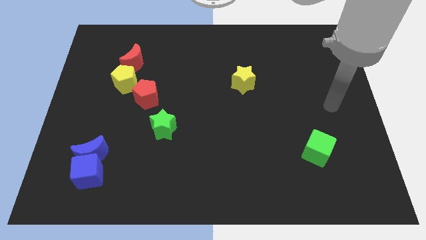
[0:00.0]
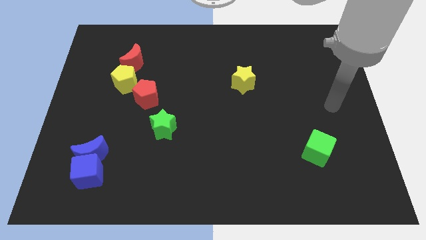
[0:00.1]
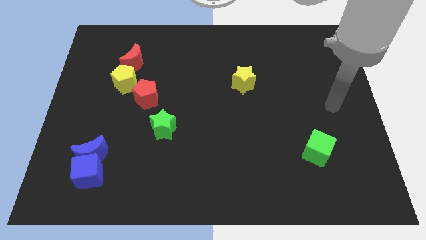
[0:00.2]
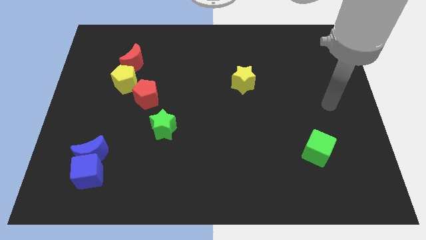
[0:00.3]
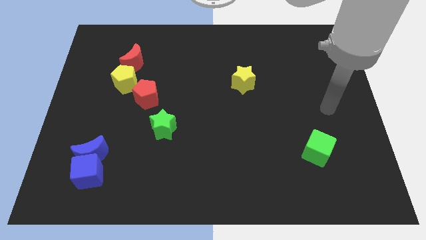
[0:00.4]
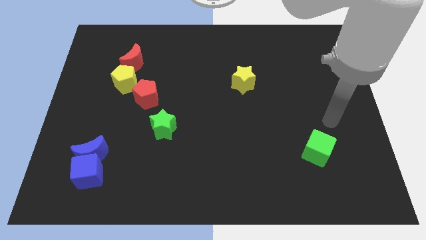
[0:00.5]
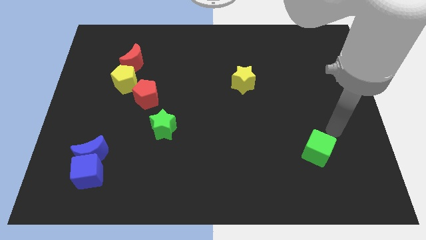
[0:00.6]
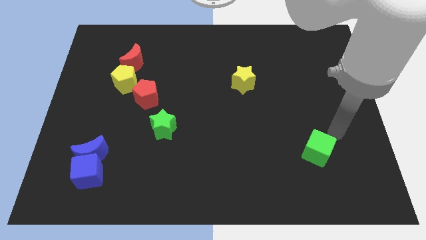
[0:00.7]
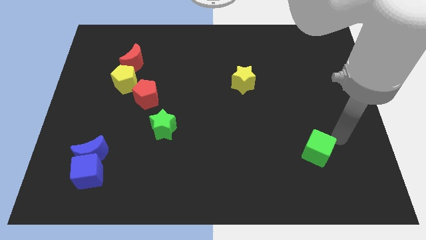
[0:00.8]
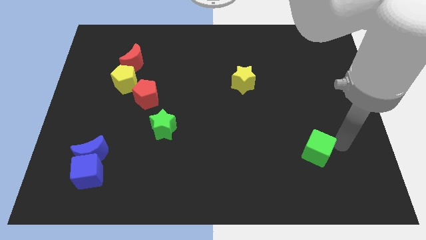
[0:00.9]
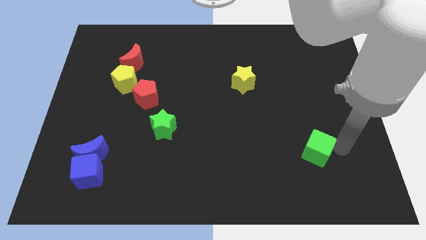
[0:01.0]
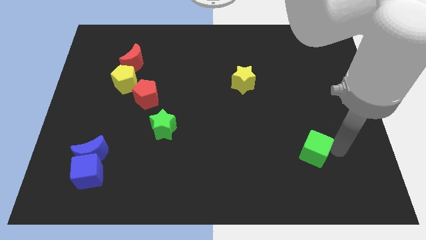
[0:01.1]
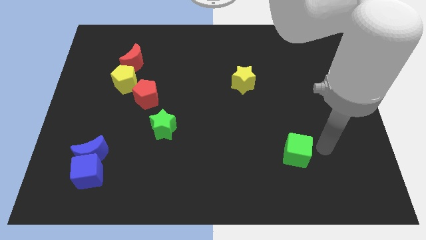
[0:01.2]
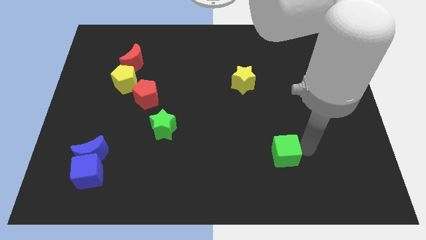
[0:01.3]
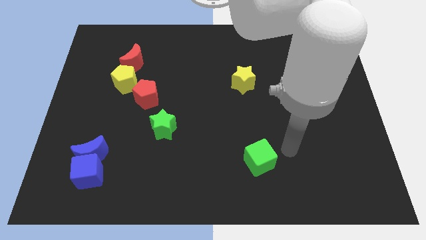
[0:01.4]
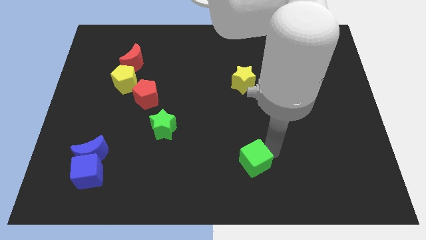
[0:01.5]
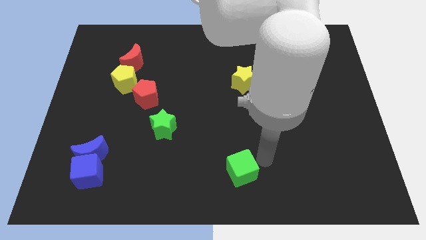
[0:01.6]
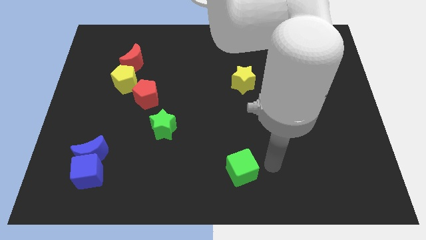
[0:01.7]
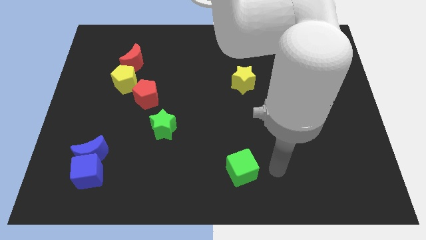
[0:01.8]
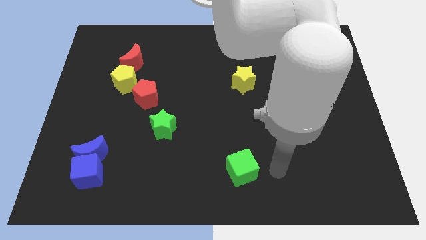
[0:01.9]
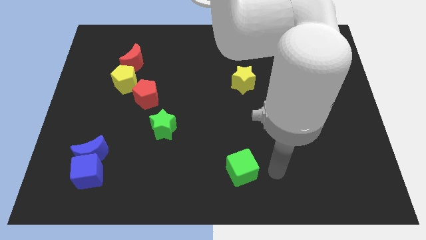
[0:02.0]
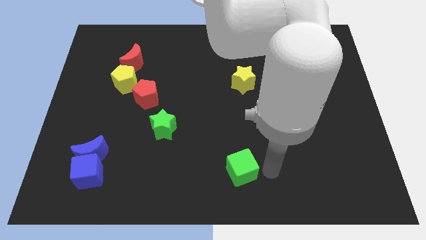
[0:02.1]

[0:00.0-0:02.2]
move the green cube towards the bottom center of the board

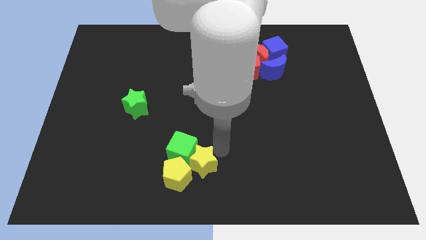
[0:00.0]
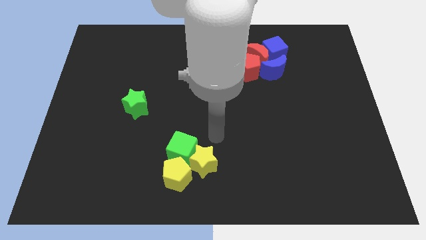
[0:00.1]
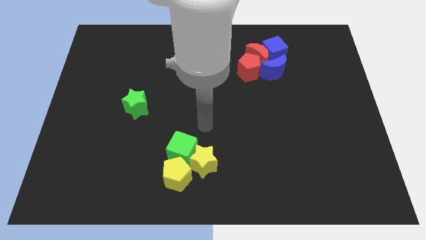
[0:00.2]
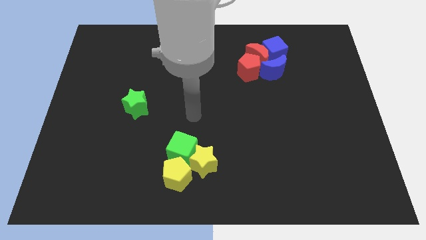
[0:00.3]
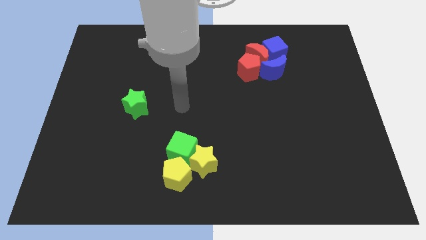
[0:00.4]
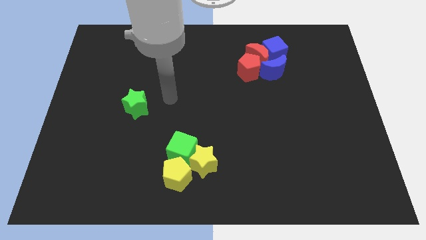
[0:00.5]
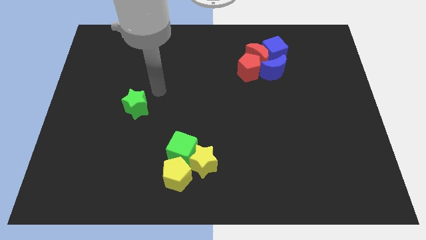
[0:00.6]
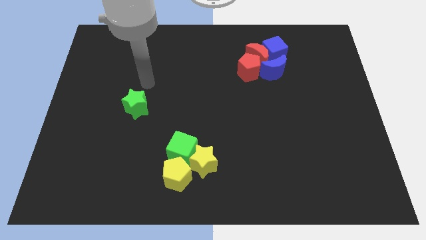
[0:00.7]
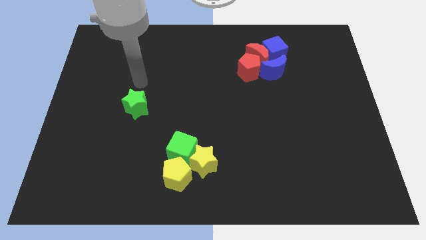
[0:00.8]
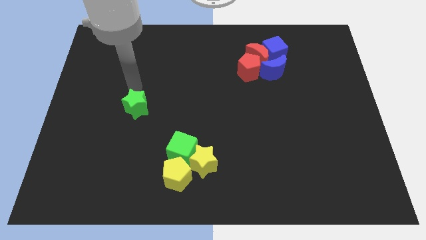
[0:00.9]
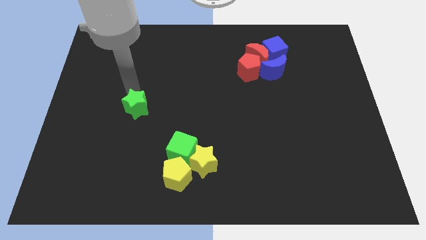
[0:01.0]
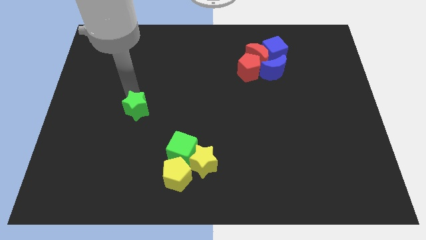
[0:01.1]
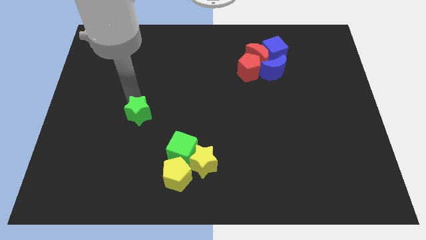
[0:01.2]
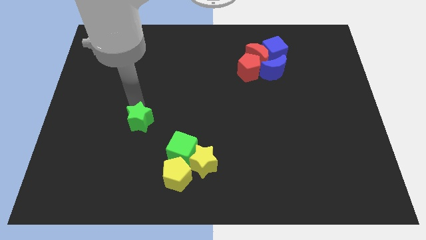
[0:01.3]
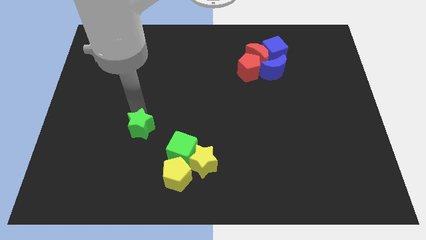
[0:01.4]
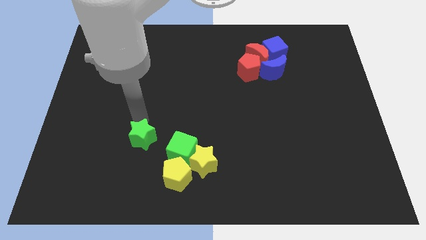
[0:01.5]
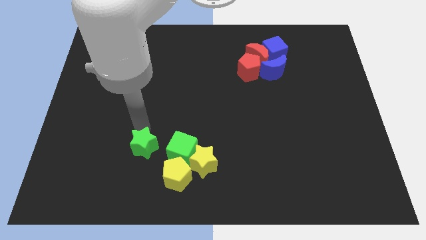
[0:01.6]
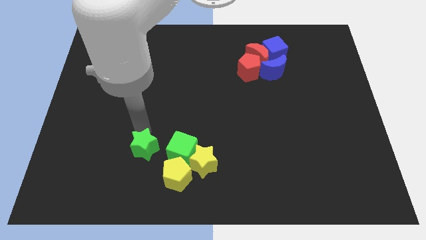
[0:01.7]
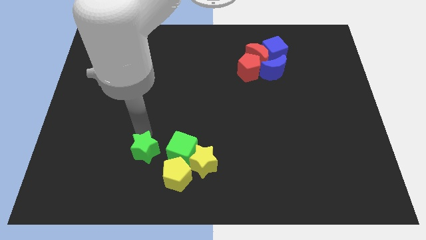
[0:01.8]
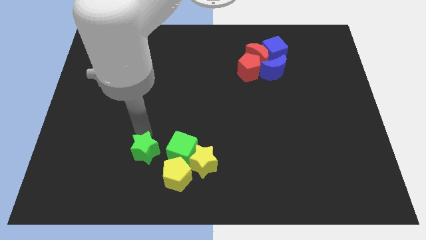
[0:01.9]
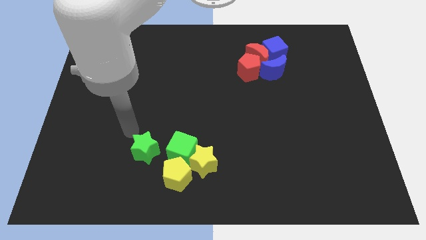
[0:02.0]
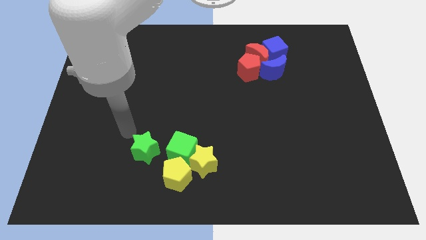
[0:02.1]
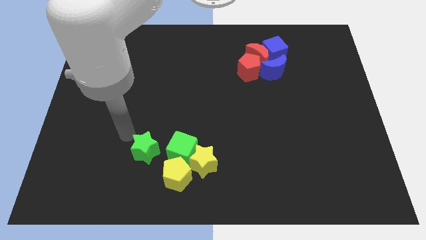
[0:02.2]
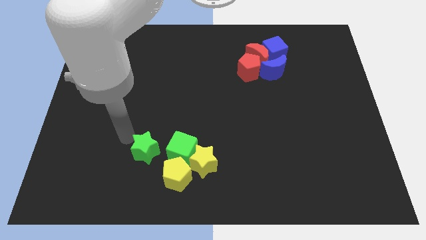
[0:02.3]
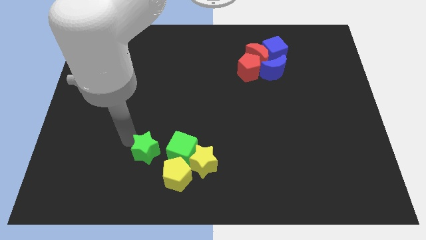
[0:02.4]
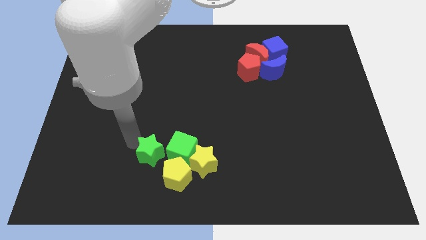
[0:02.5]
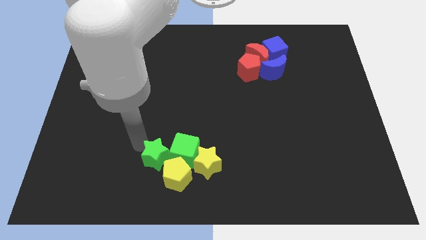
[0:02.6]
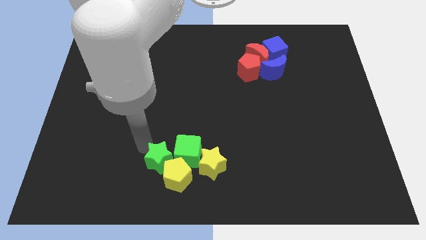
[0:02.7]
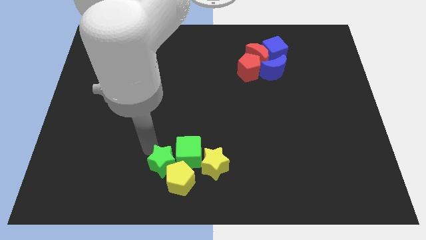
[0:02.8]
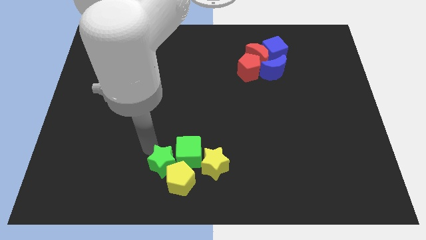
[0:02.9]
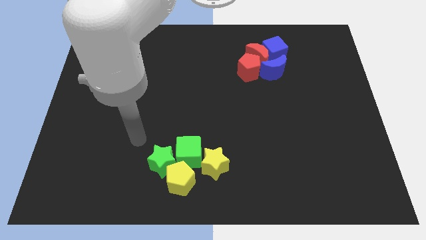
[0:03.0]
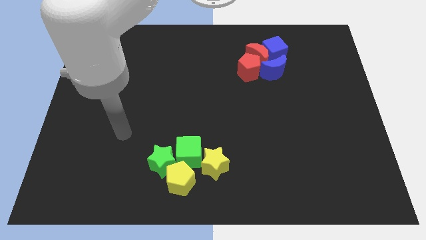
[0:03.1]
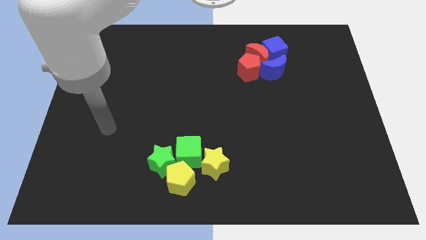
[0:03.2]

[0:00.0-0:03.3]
push the green star into the green cube

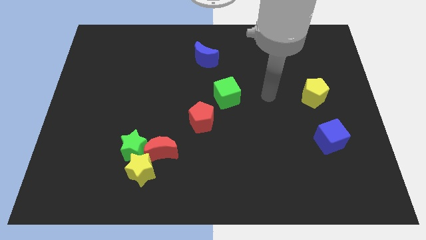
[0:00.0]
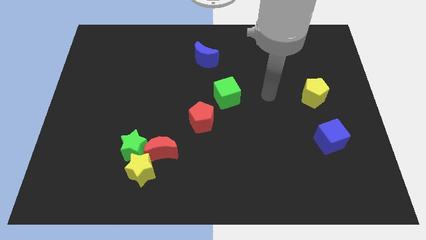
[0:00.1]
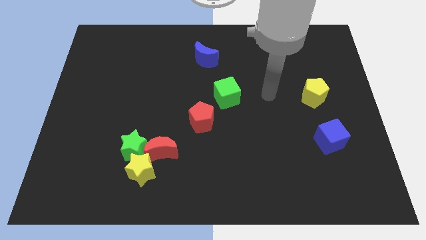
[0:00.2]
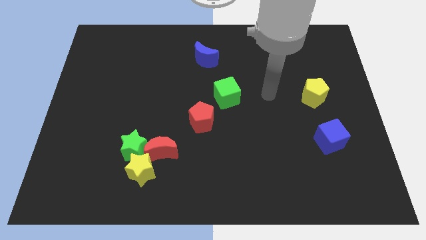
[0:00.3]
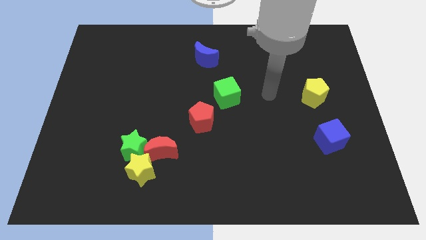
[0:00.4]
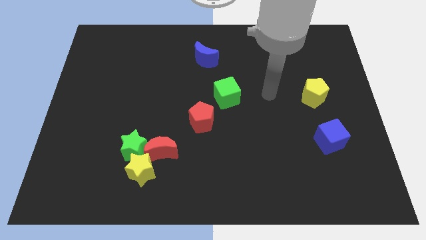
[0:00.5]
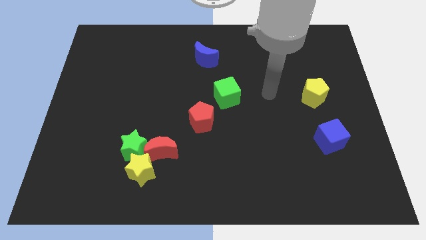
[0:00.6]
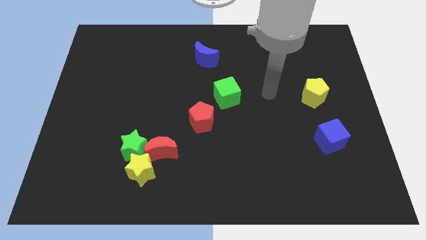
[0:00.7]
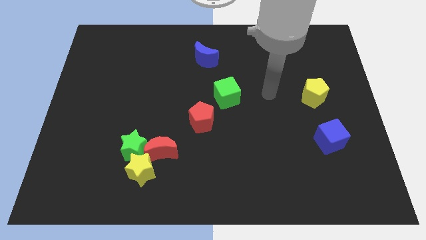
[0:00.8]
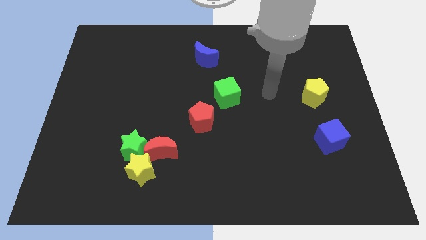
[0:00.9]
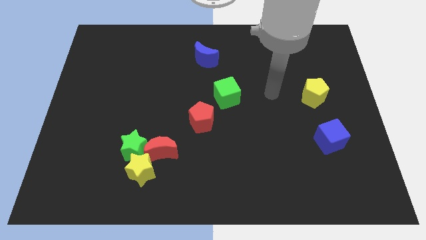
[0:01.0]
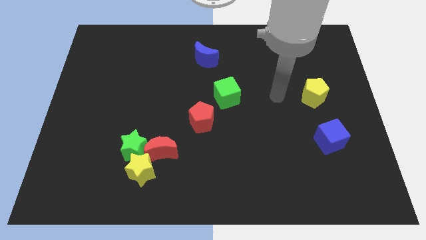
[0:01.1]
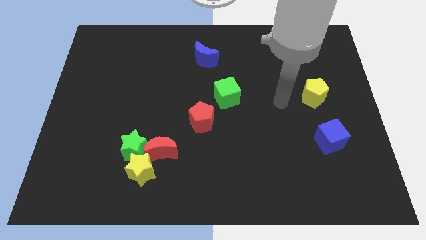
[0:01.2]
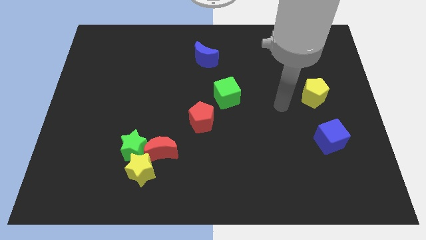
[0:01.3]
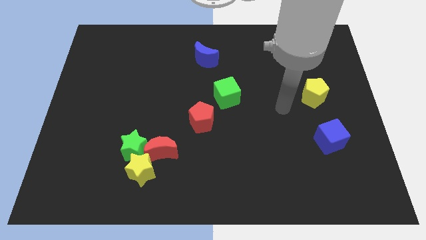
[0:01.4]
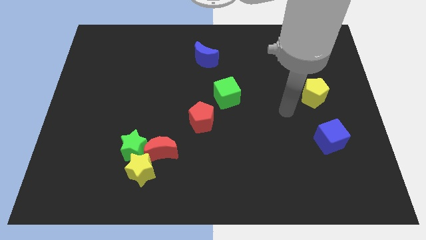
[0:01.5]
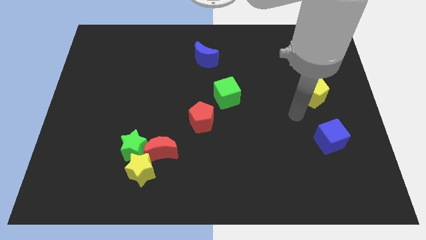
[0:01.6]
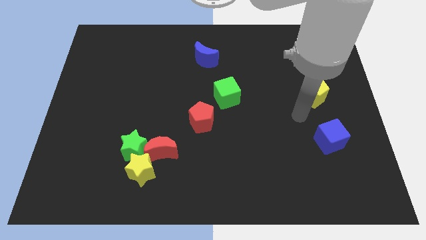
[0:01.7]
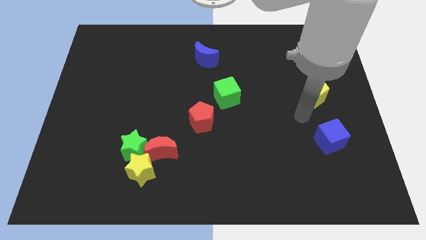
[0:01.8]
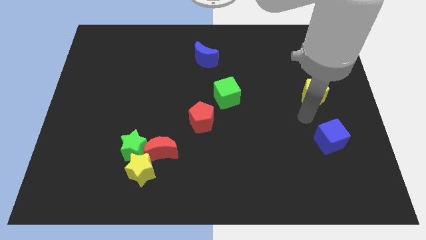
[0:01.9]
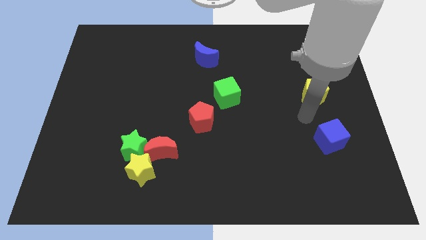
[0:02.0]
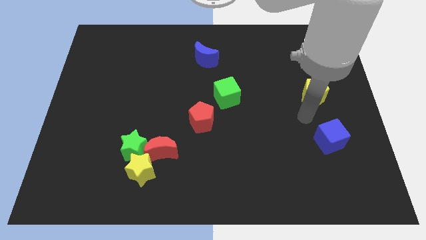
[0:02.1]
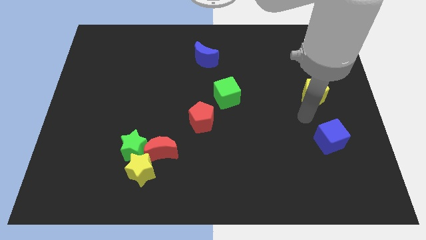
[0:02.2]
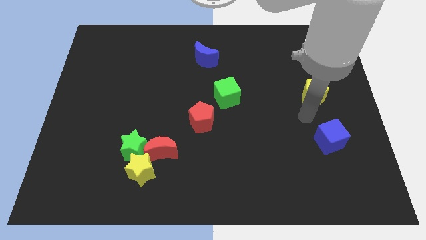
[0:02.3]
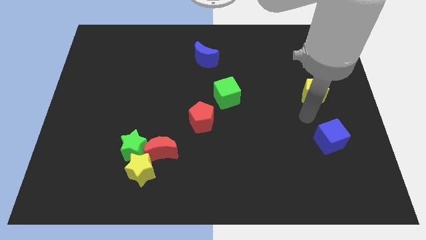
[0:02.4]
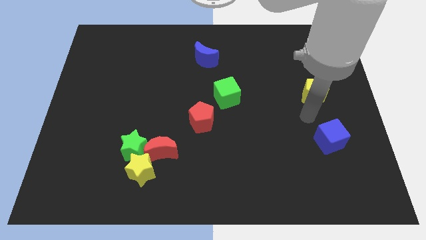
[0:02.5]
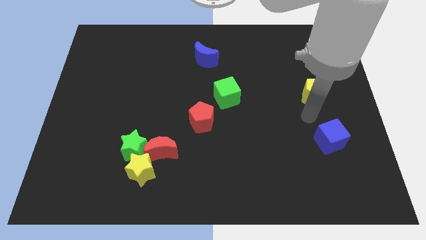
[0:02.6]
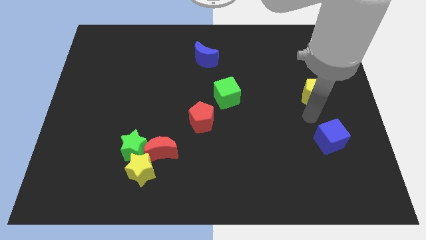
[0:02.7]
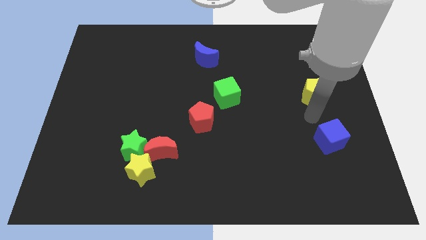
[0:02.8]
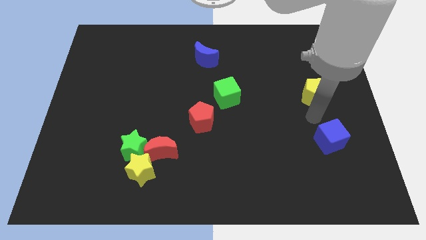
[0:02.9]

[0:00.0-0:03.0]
move the arm to the bottom of the yellow pentagon

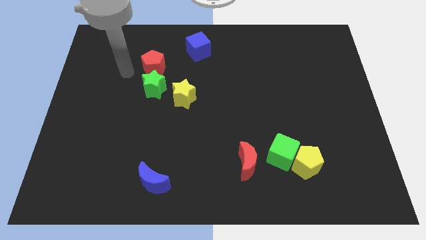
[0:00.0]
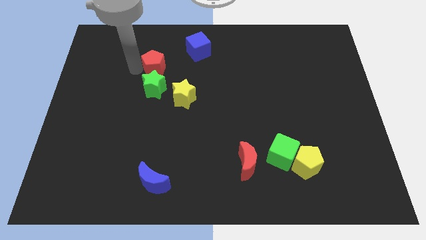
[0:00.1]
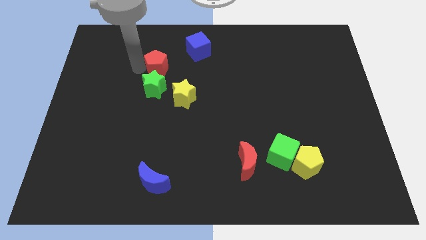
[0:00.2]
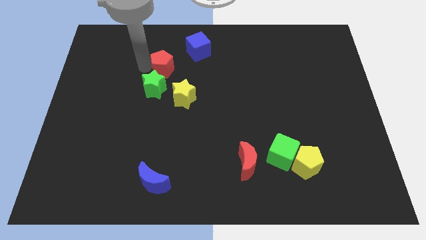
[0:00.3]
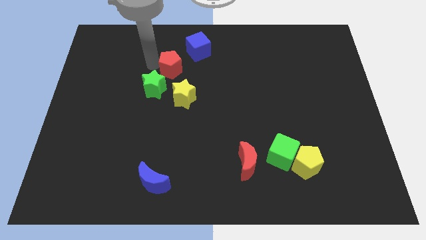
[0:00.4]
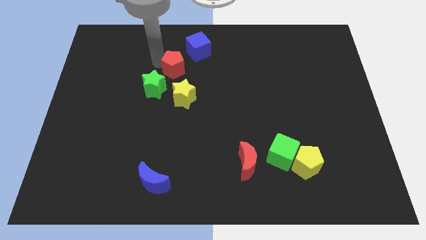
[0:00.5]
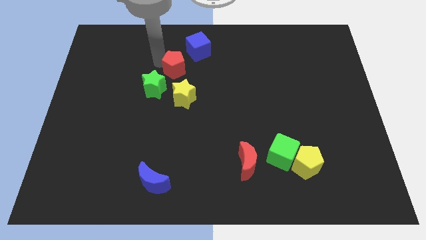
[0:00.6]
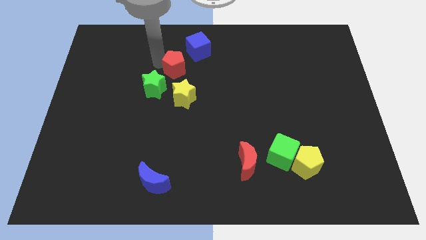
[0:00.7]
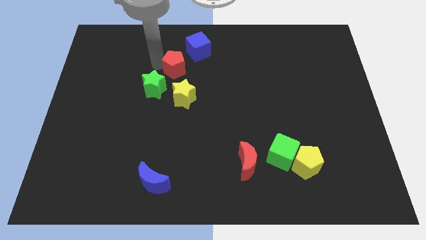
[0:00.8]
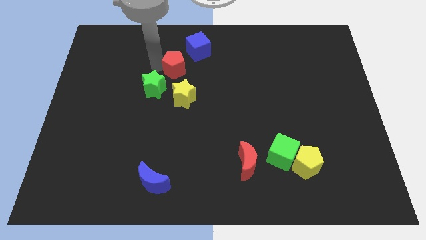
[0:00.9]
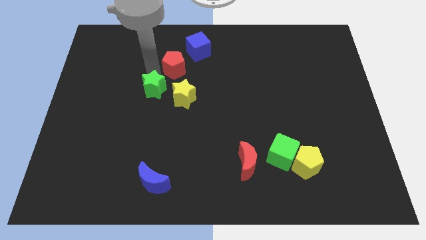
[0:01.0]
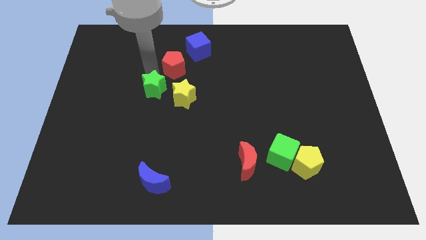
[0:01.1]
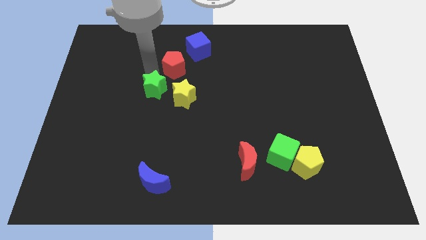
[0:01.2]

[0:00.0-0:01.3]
put the red pentagon diagonally in between the green star and the blue cube
